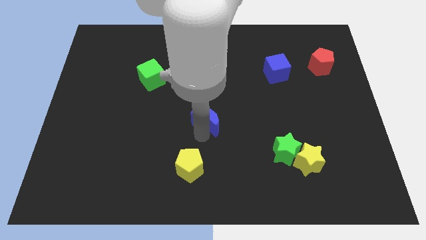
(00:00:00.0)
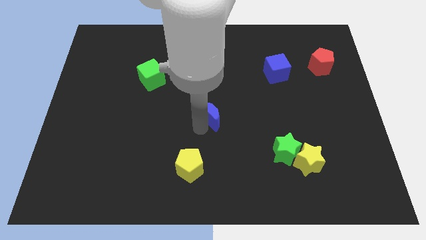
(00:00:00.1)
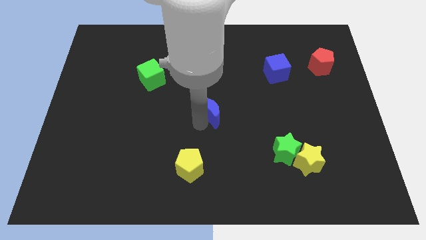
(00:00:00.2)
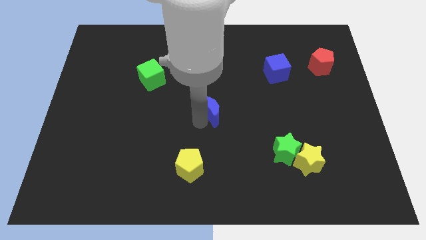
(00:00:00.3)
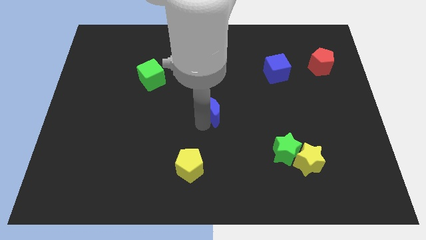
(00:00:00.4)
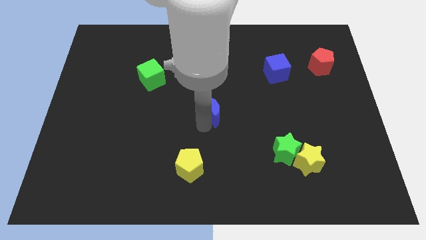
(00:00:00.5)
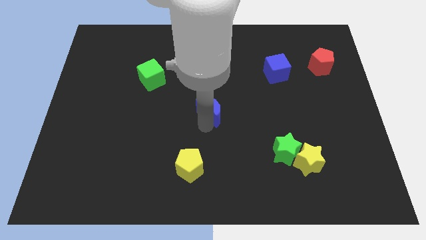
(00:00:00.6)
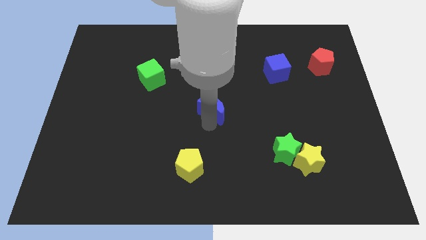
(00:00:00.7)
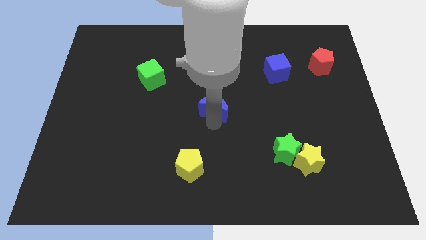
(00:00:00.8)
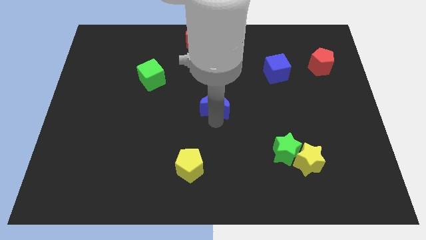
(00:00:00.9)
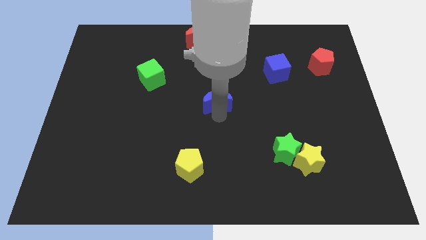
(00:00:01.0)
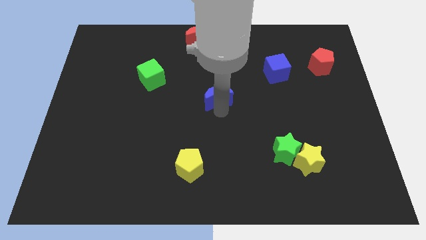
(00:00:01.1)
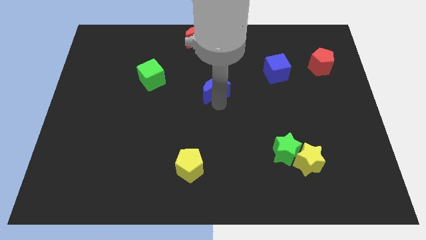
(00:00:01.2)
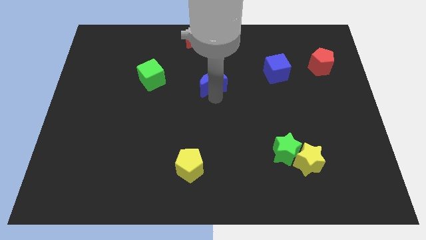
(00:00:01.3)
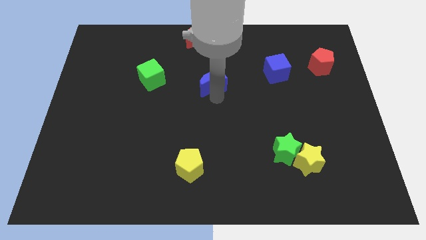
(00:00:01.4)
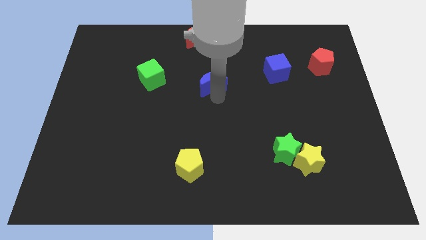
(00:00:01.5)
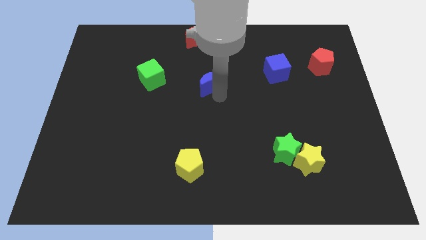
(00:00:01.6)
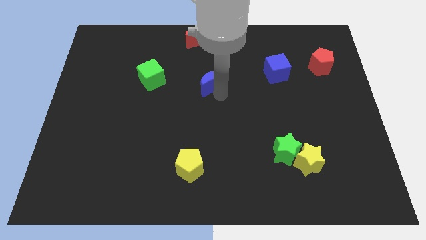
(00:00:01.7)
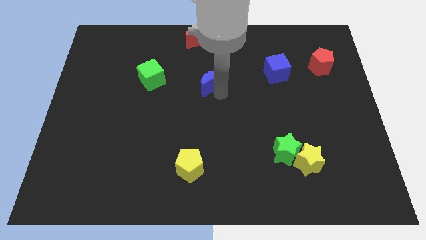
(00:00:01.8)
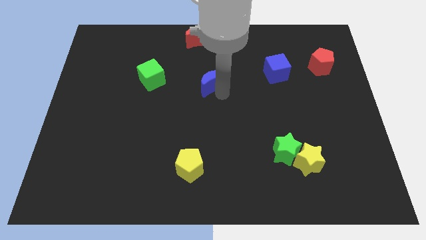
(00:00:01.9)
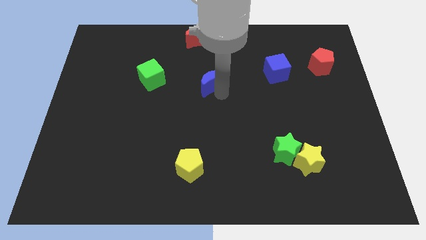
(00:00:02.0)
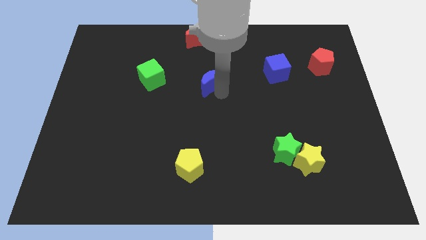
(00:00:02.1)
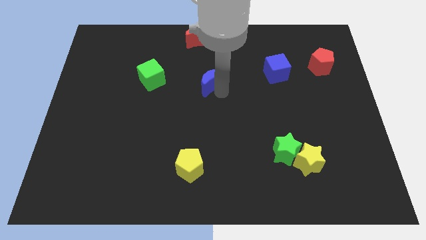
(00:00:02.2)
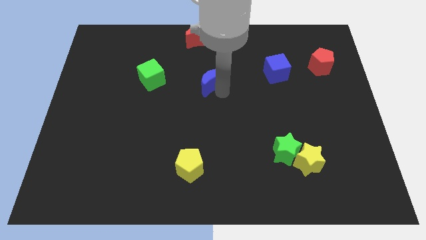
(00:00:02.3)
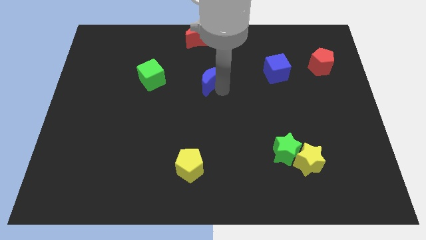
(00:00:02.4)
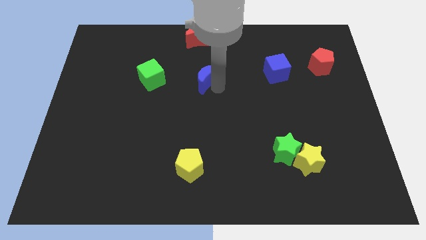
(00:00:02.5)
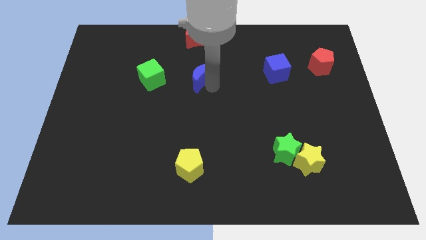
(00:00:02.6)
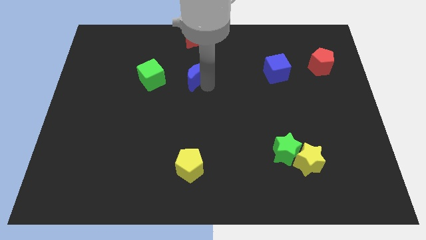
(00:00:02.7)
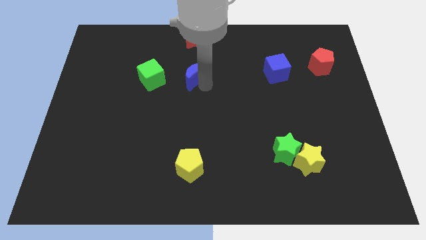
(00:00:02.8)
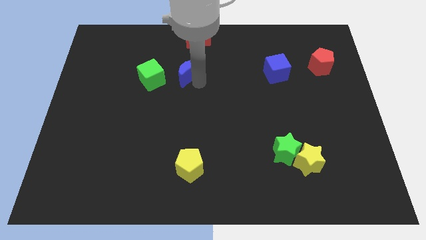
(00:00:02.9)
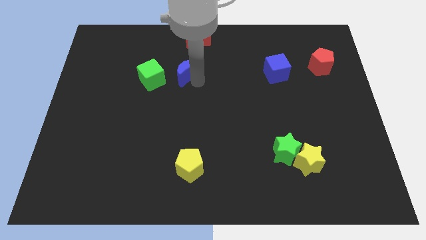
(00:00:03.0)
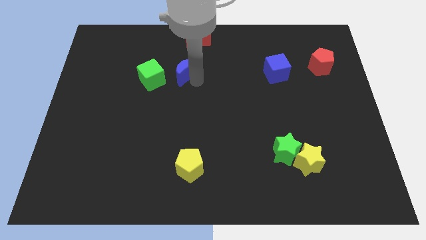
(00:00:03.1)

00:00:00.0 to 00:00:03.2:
place blue moon parallel right to green cube

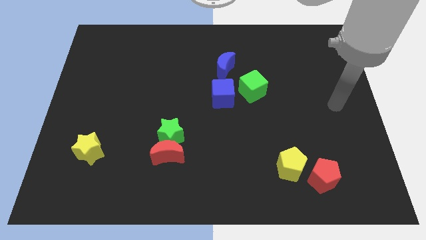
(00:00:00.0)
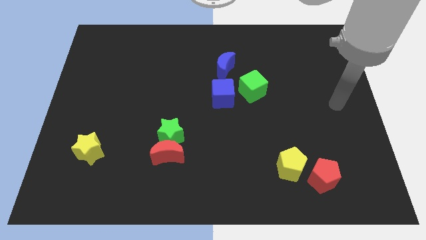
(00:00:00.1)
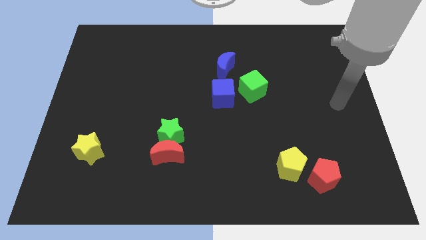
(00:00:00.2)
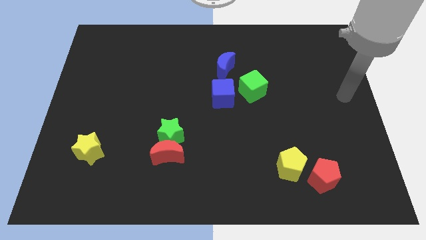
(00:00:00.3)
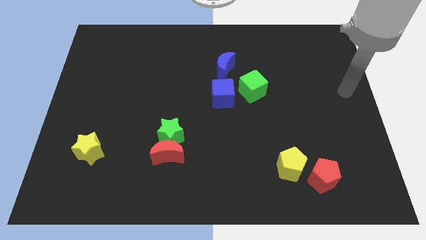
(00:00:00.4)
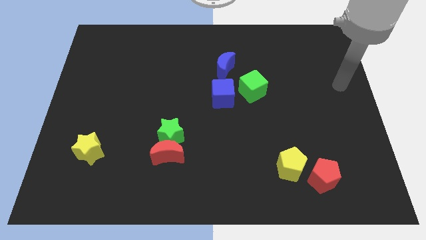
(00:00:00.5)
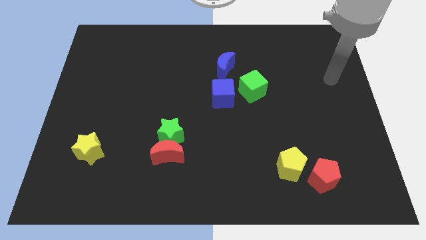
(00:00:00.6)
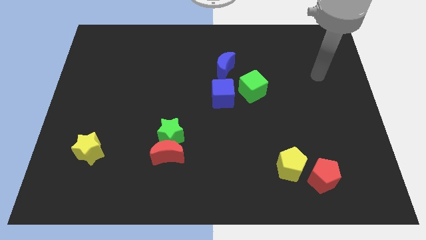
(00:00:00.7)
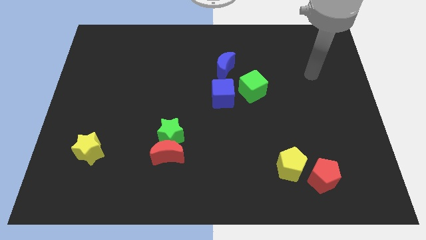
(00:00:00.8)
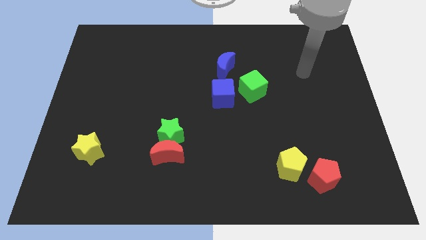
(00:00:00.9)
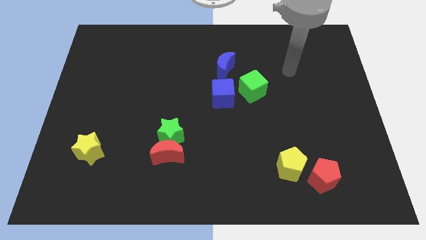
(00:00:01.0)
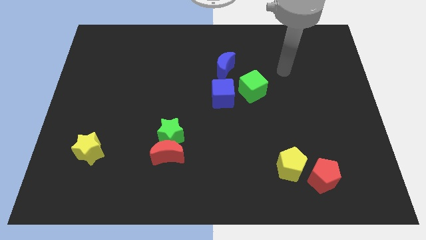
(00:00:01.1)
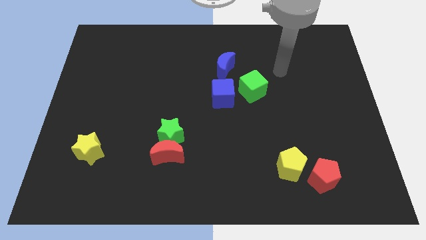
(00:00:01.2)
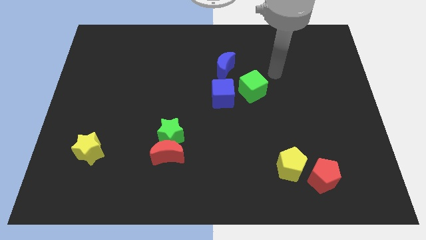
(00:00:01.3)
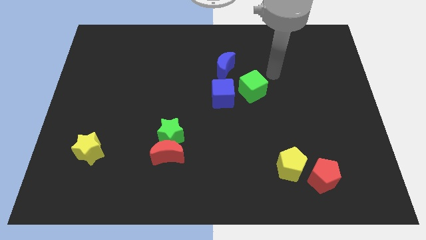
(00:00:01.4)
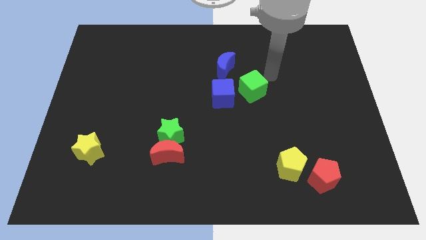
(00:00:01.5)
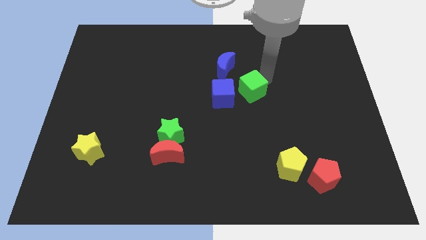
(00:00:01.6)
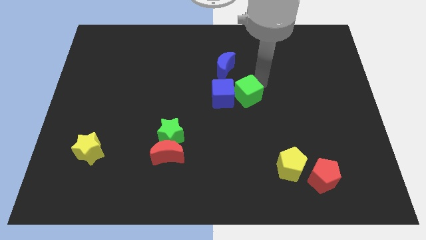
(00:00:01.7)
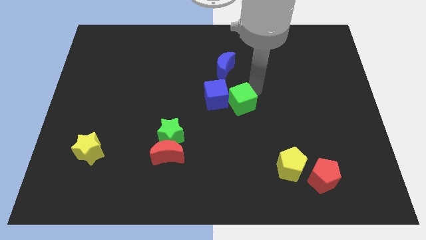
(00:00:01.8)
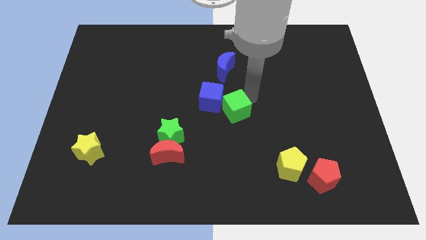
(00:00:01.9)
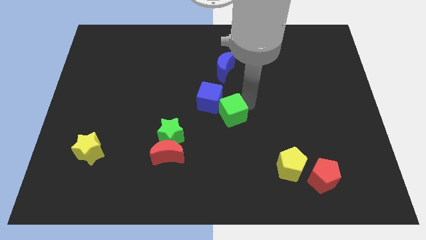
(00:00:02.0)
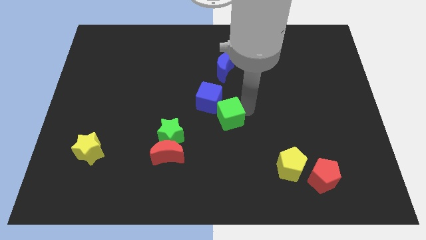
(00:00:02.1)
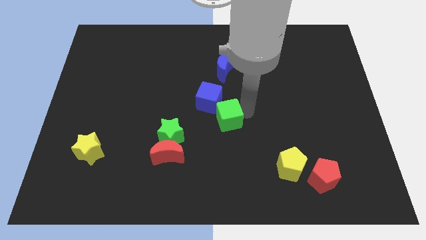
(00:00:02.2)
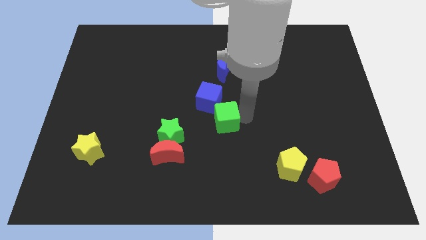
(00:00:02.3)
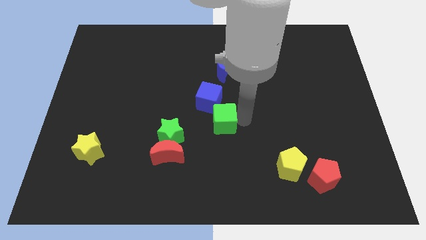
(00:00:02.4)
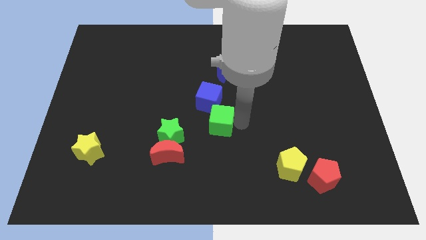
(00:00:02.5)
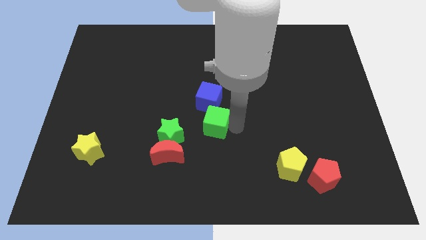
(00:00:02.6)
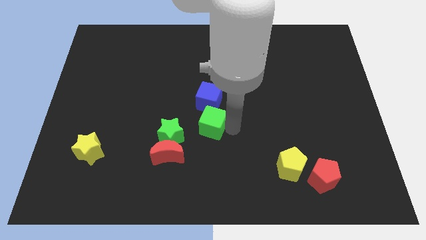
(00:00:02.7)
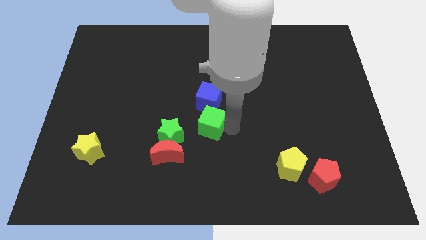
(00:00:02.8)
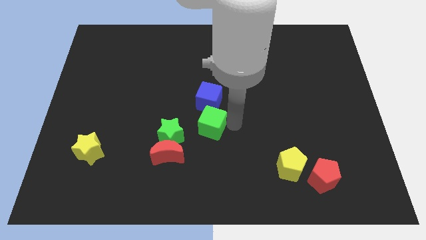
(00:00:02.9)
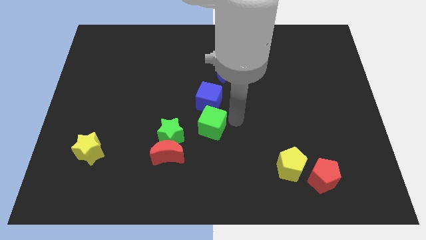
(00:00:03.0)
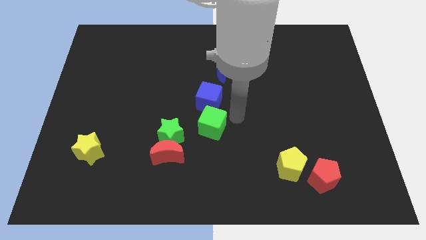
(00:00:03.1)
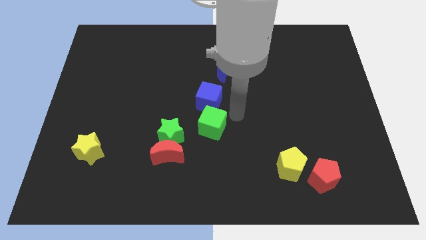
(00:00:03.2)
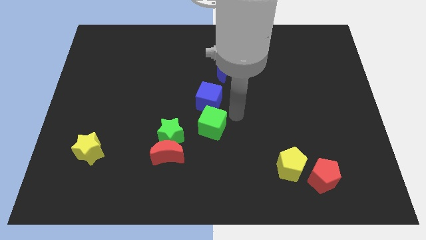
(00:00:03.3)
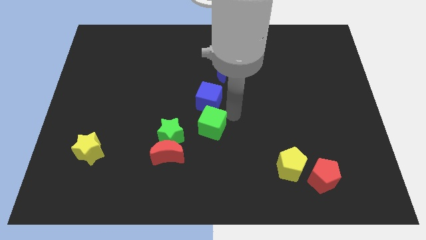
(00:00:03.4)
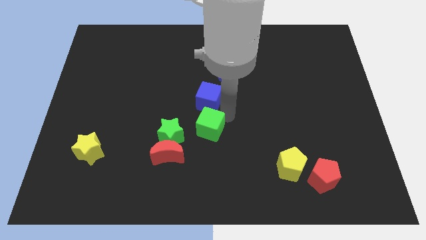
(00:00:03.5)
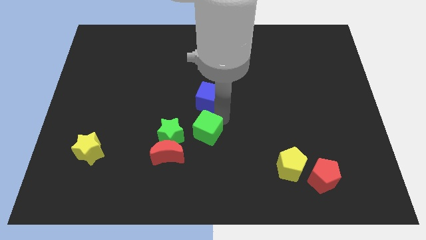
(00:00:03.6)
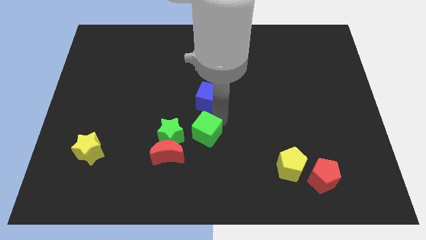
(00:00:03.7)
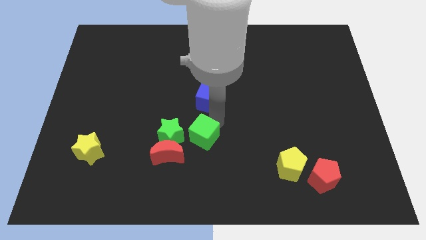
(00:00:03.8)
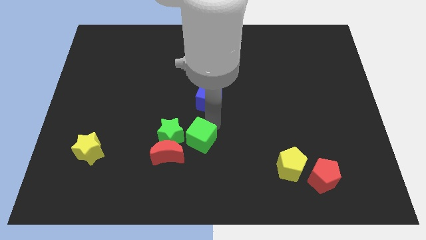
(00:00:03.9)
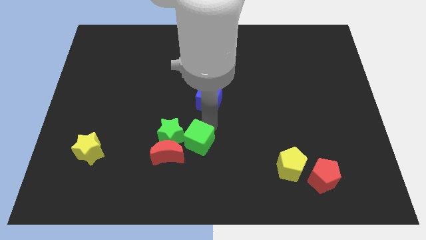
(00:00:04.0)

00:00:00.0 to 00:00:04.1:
move the green cube slightly downwards

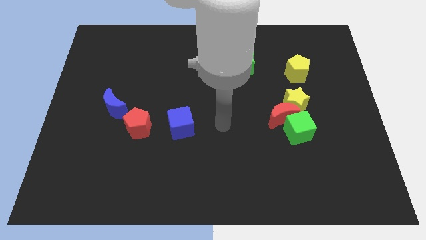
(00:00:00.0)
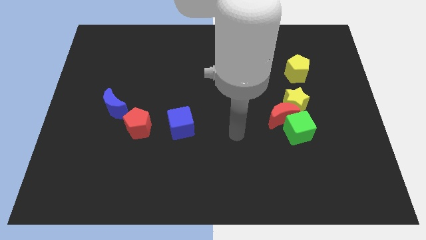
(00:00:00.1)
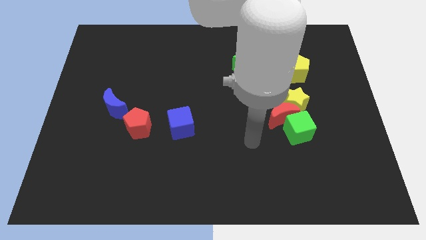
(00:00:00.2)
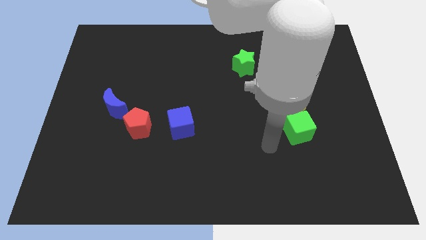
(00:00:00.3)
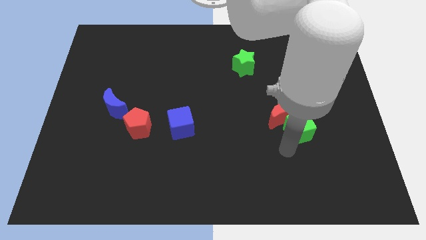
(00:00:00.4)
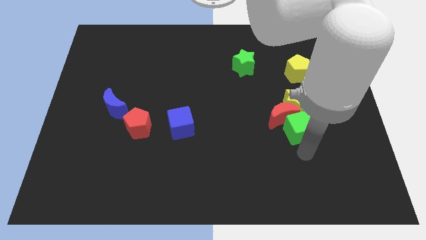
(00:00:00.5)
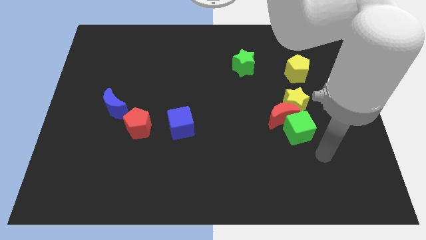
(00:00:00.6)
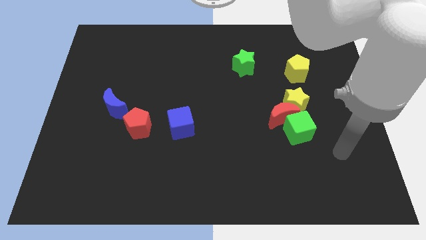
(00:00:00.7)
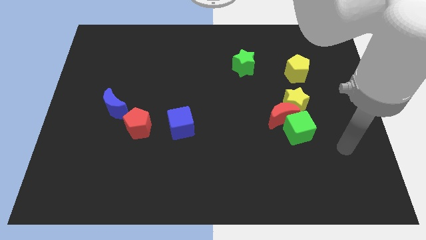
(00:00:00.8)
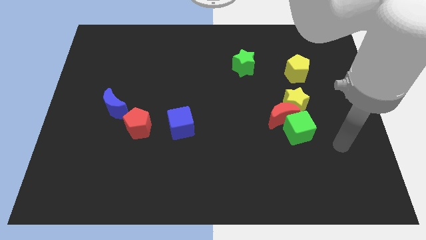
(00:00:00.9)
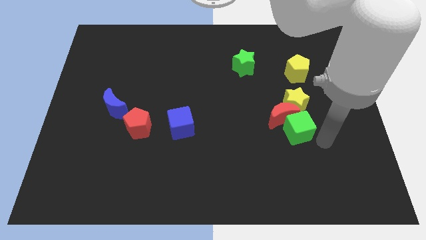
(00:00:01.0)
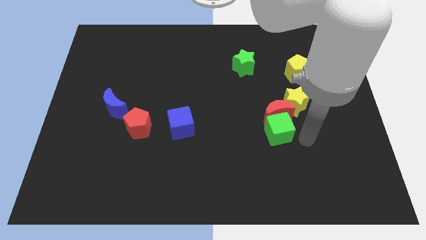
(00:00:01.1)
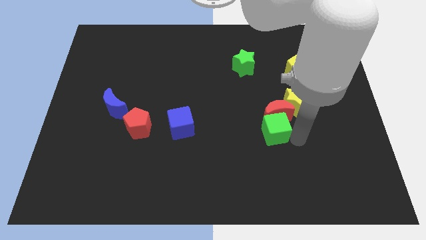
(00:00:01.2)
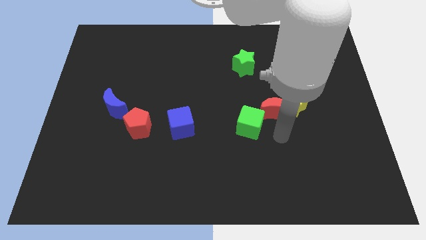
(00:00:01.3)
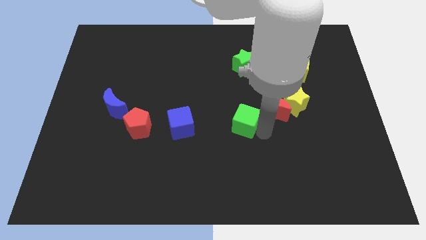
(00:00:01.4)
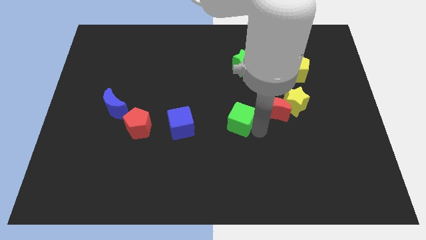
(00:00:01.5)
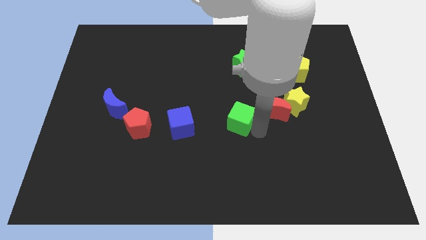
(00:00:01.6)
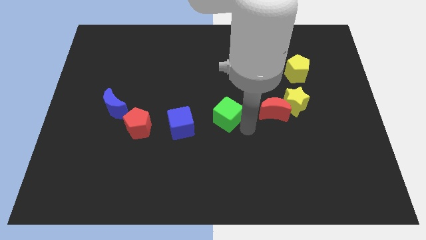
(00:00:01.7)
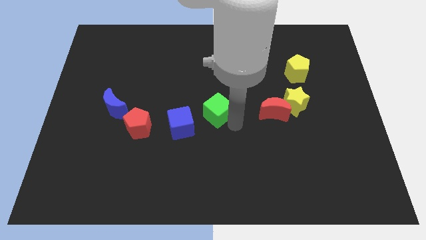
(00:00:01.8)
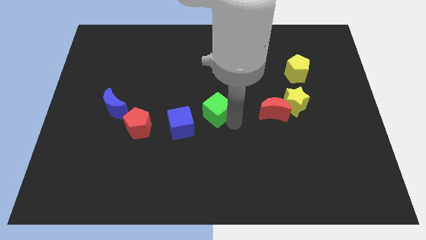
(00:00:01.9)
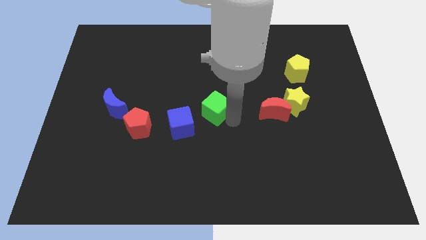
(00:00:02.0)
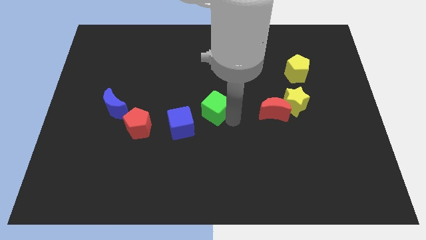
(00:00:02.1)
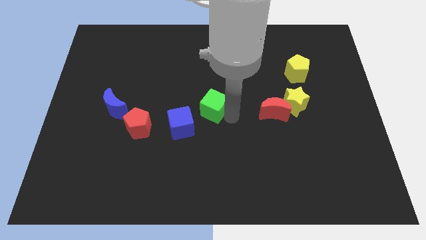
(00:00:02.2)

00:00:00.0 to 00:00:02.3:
move green cube towards the blue cube
